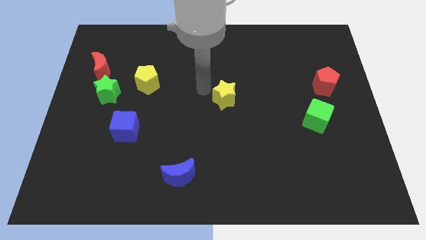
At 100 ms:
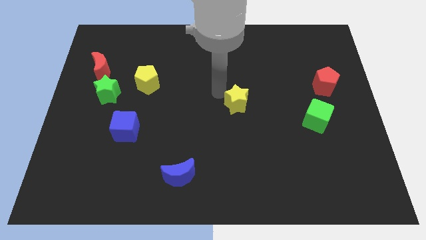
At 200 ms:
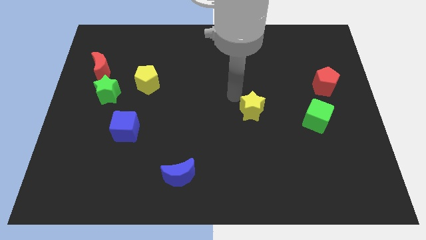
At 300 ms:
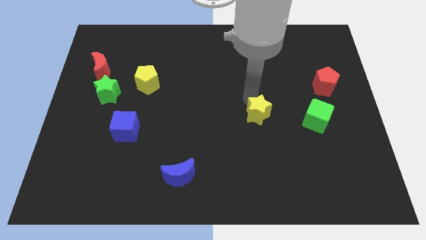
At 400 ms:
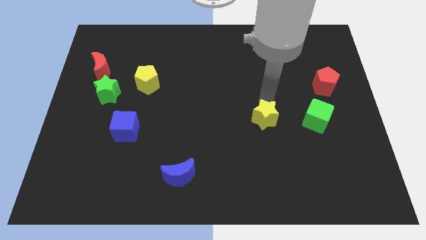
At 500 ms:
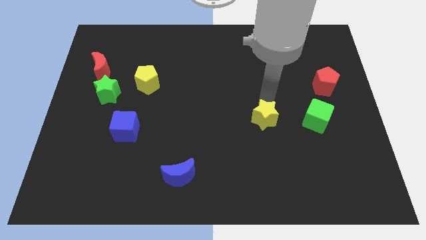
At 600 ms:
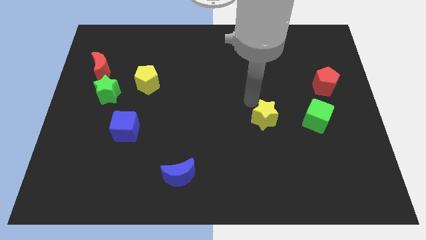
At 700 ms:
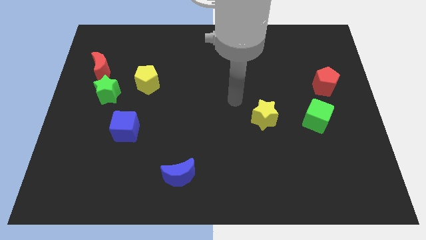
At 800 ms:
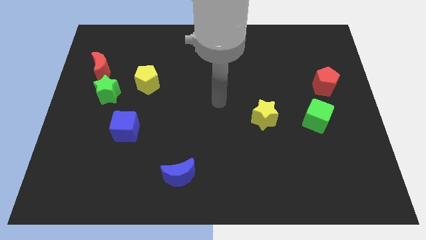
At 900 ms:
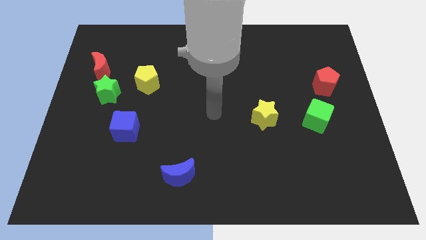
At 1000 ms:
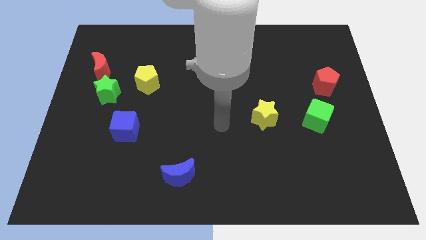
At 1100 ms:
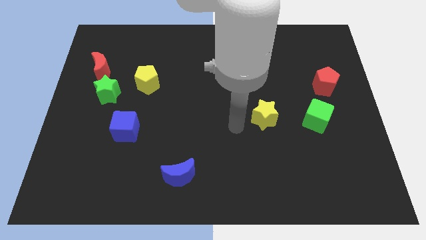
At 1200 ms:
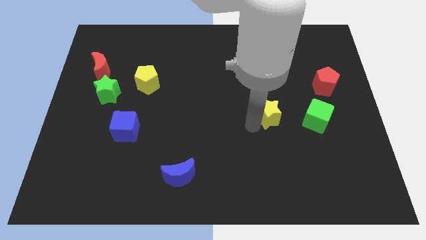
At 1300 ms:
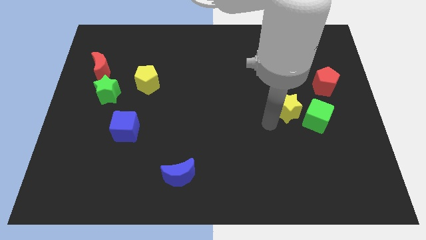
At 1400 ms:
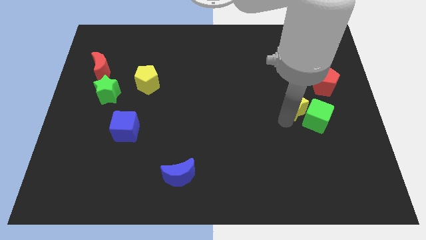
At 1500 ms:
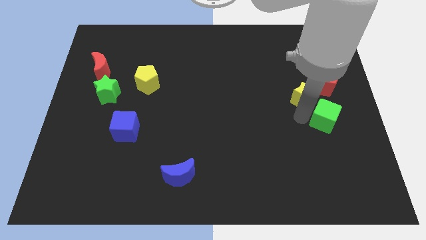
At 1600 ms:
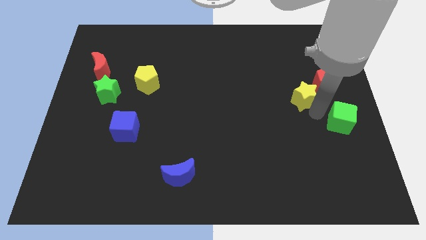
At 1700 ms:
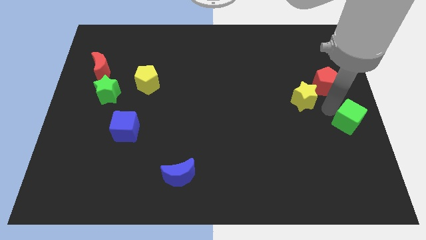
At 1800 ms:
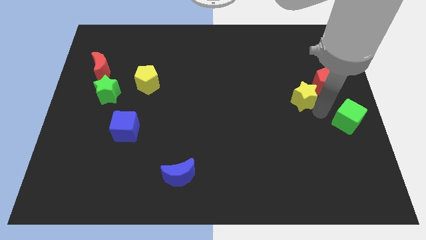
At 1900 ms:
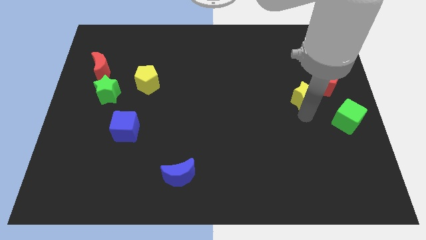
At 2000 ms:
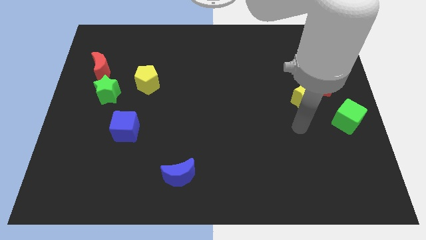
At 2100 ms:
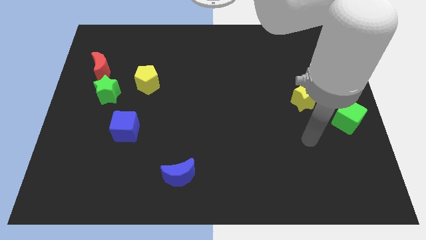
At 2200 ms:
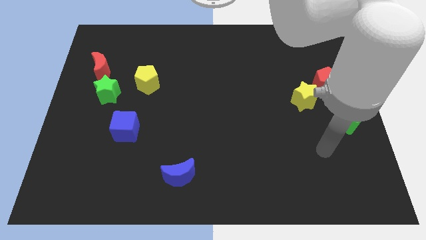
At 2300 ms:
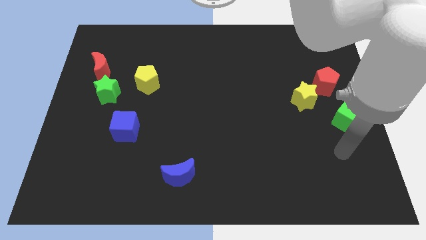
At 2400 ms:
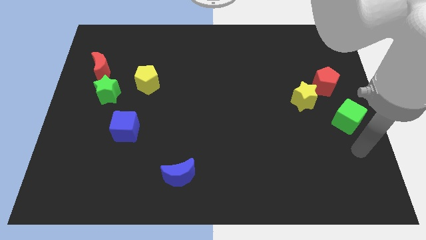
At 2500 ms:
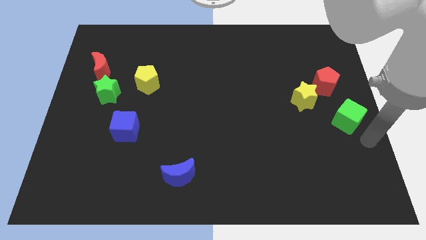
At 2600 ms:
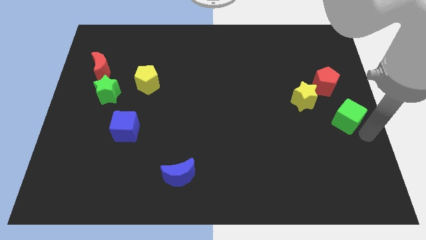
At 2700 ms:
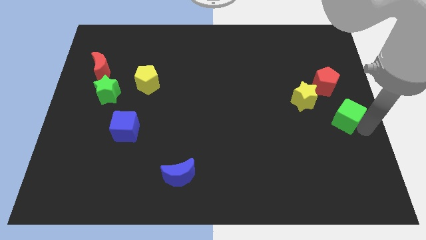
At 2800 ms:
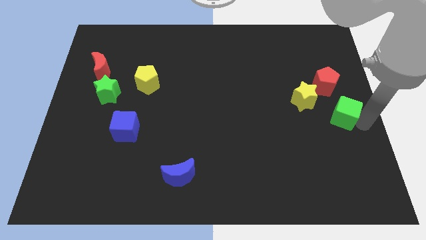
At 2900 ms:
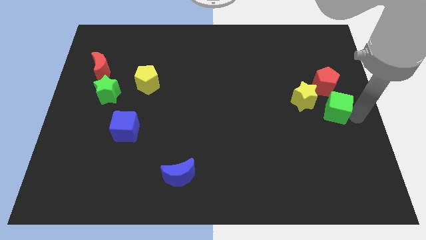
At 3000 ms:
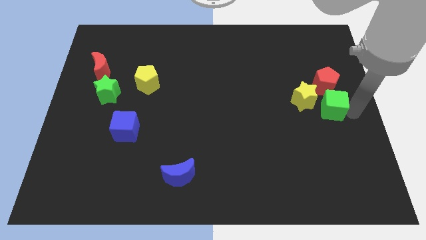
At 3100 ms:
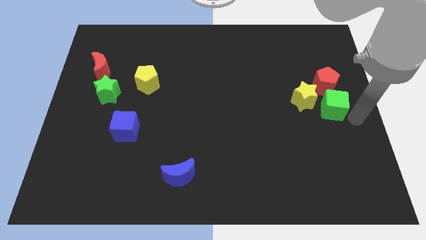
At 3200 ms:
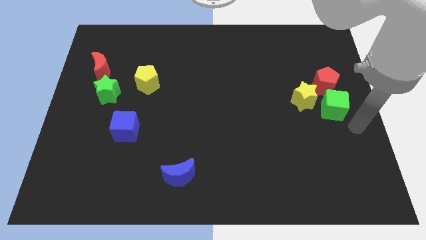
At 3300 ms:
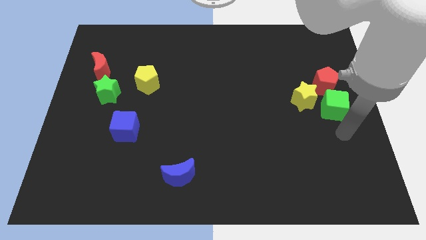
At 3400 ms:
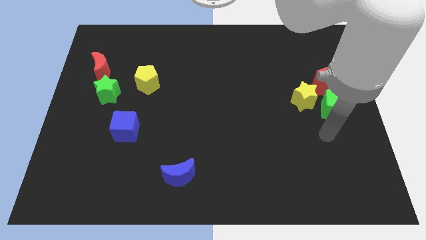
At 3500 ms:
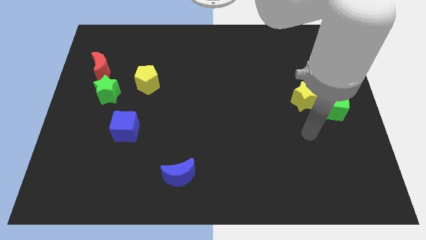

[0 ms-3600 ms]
move the green cube below the red pentagon

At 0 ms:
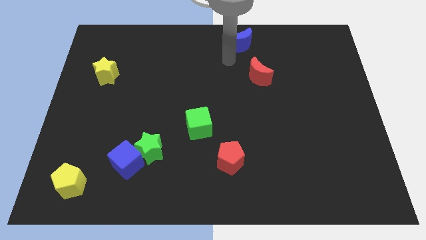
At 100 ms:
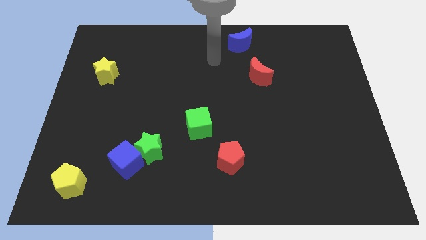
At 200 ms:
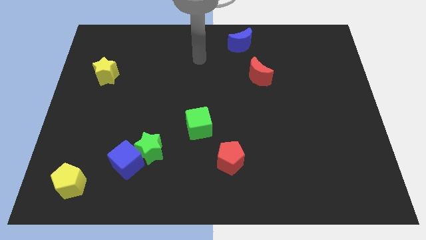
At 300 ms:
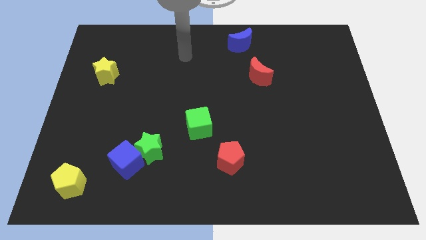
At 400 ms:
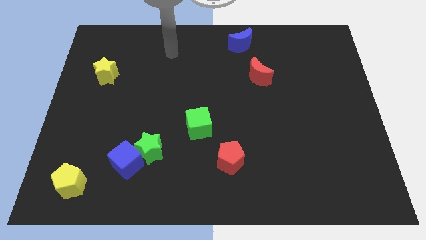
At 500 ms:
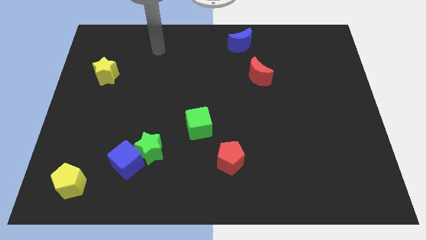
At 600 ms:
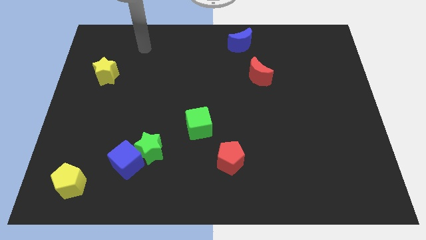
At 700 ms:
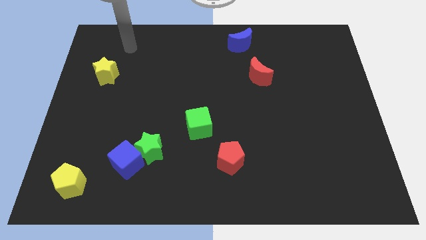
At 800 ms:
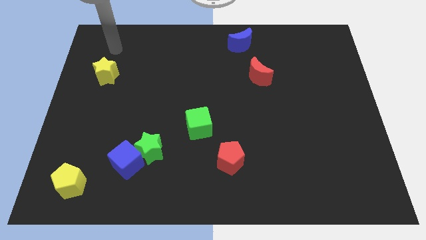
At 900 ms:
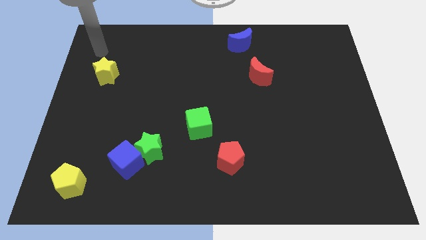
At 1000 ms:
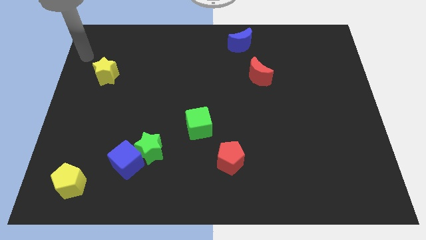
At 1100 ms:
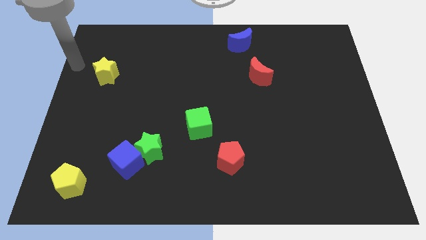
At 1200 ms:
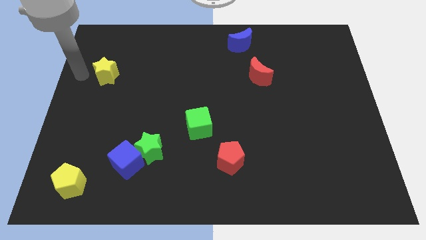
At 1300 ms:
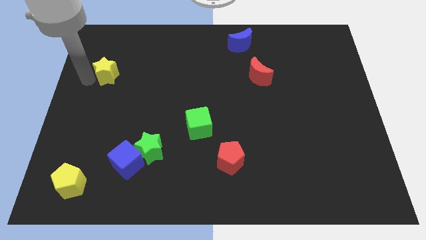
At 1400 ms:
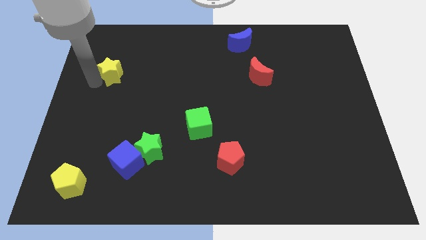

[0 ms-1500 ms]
tap the yellow star

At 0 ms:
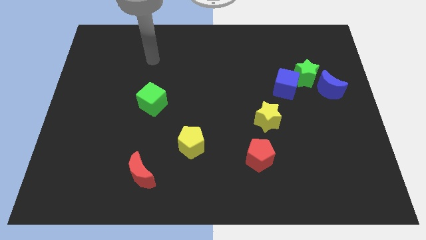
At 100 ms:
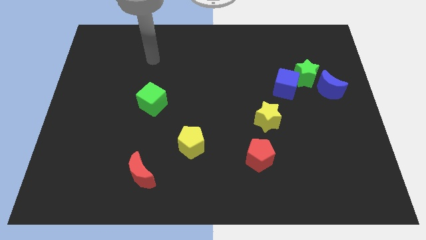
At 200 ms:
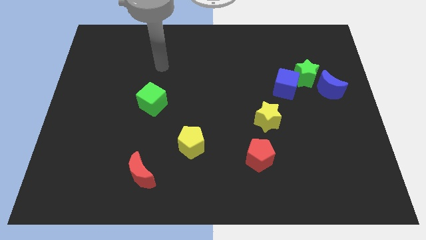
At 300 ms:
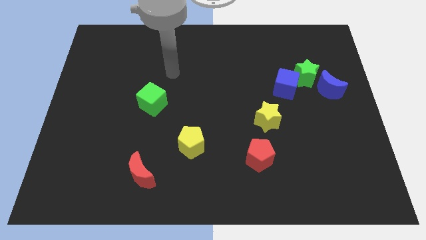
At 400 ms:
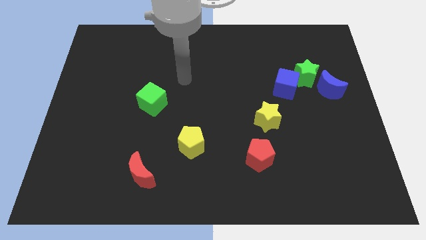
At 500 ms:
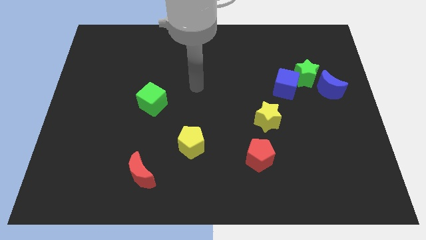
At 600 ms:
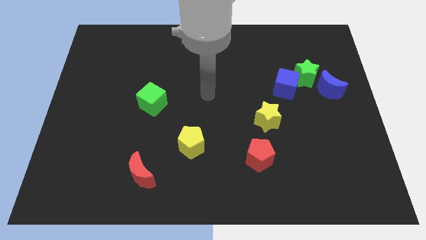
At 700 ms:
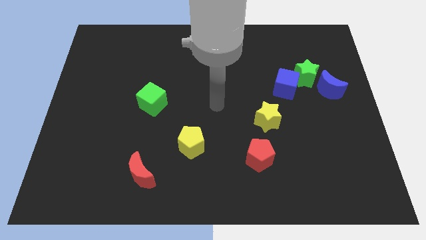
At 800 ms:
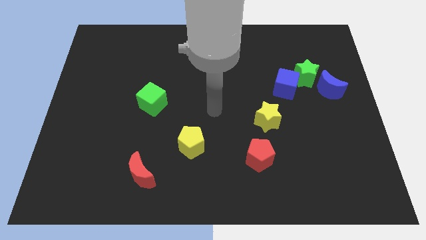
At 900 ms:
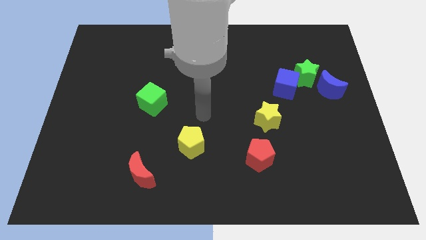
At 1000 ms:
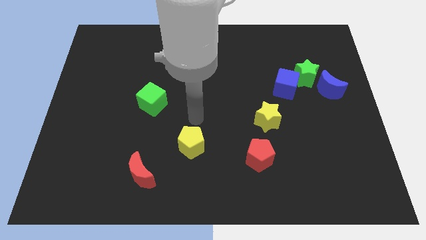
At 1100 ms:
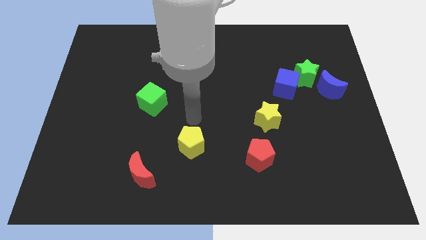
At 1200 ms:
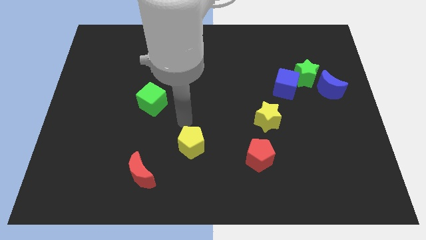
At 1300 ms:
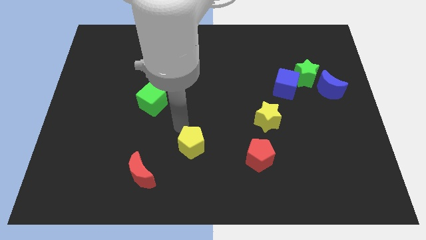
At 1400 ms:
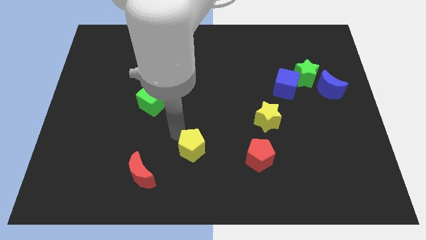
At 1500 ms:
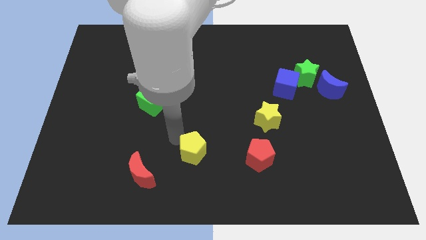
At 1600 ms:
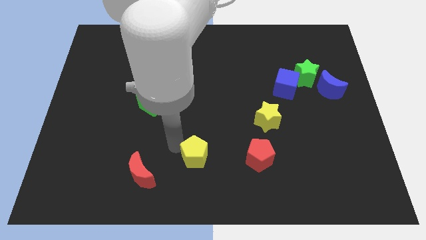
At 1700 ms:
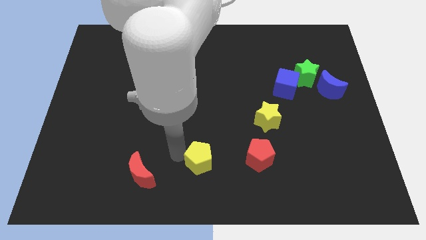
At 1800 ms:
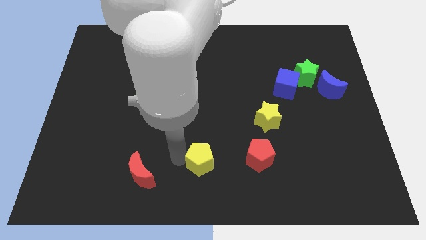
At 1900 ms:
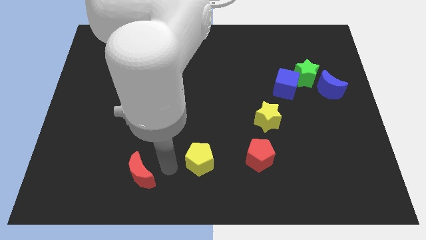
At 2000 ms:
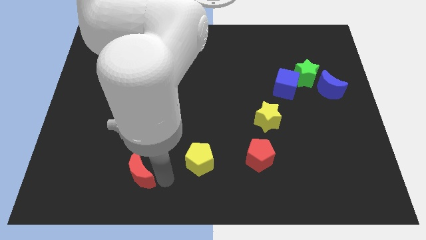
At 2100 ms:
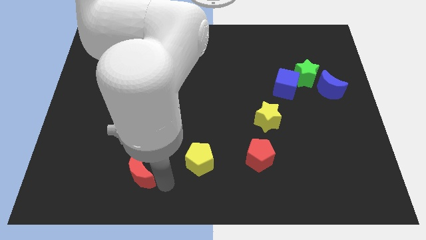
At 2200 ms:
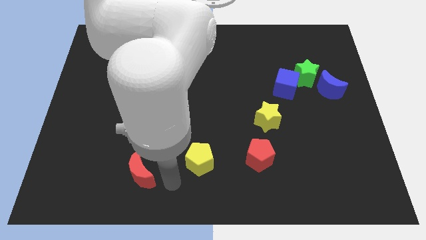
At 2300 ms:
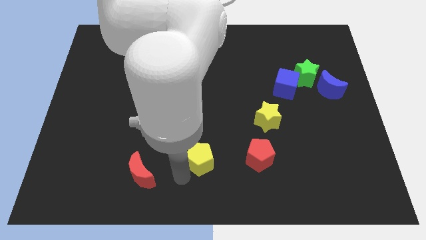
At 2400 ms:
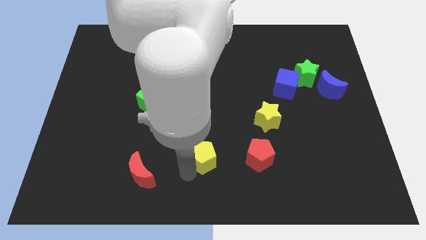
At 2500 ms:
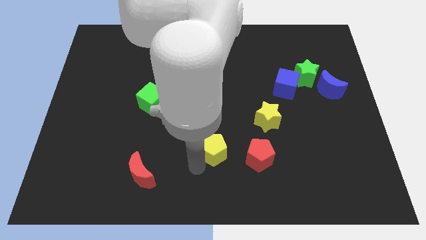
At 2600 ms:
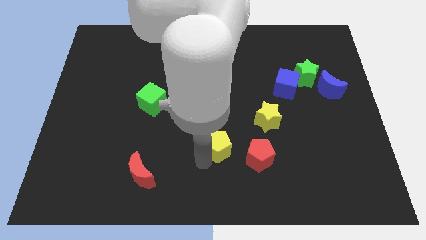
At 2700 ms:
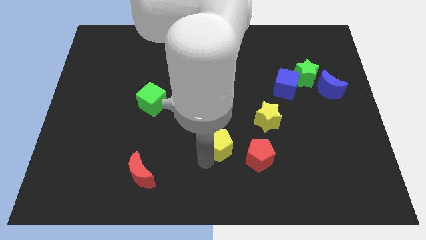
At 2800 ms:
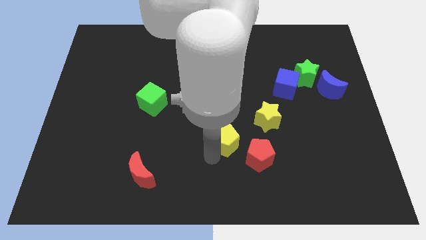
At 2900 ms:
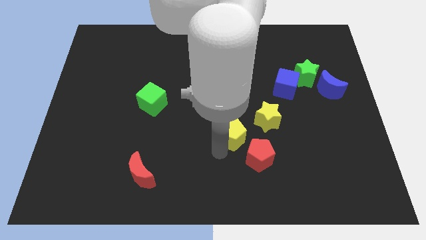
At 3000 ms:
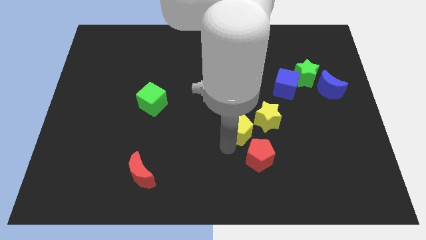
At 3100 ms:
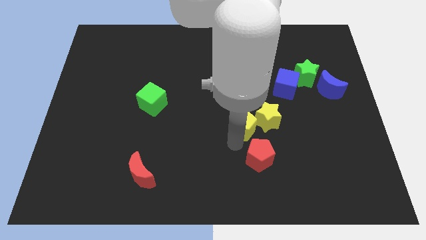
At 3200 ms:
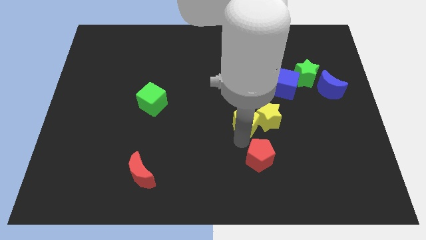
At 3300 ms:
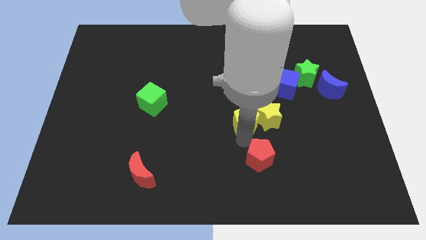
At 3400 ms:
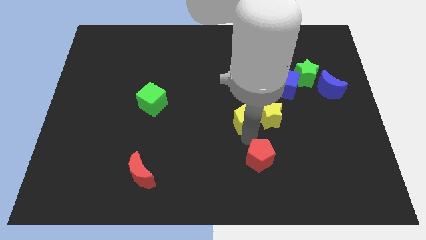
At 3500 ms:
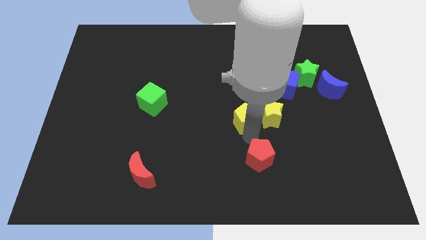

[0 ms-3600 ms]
move the yellow pentagon into the left side of the yellow star
